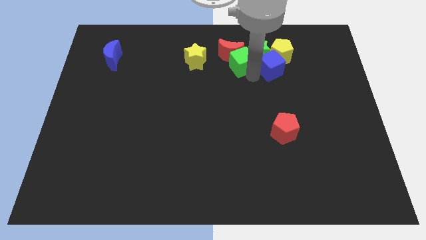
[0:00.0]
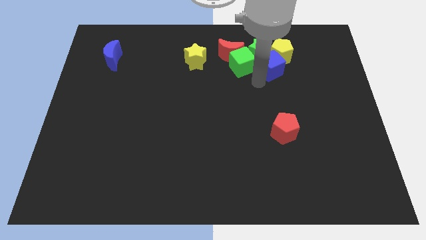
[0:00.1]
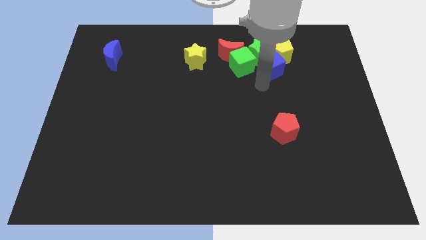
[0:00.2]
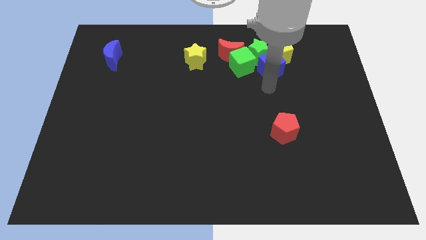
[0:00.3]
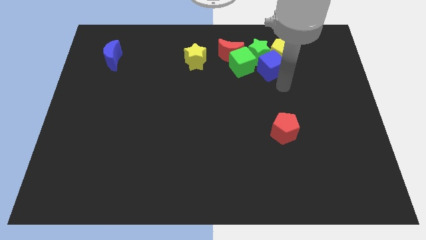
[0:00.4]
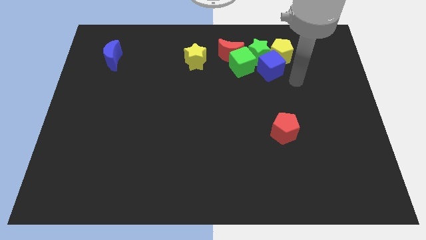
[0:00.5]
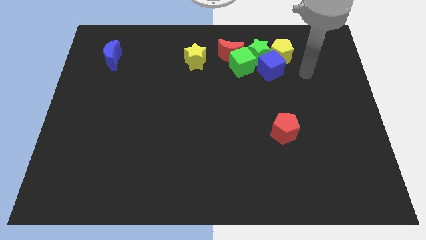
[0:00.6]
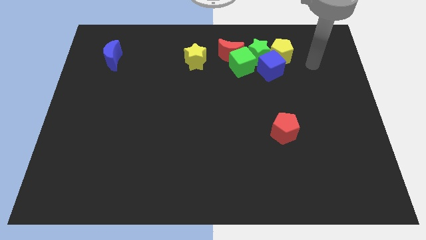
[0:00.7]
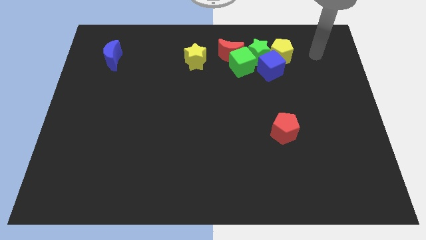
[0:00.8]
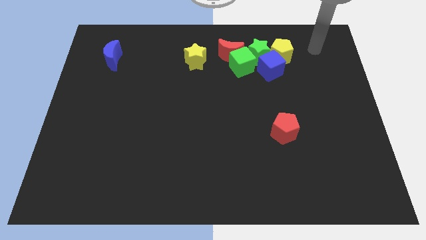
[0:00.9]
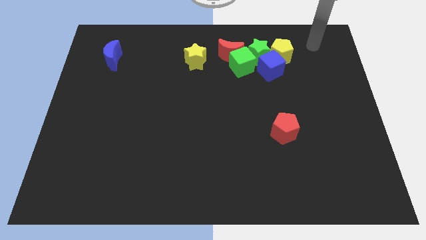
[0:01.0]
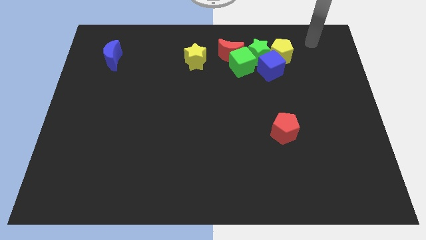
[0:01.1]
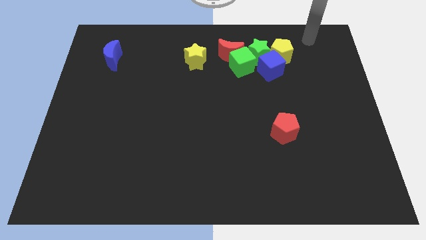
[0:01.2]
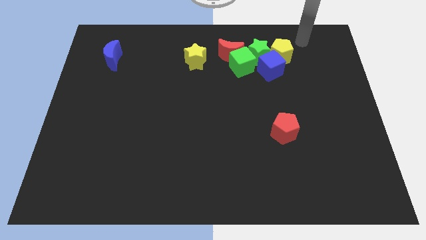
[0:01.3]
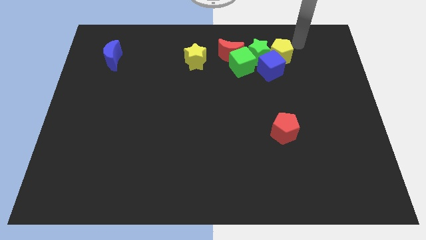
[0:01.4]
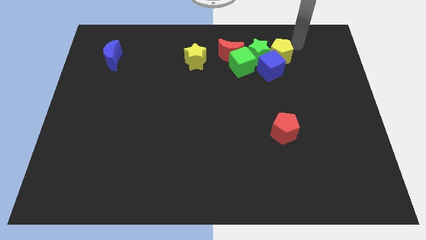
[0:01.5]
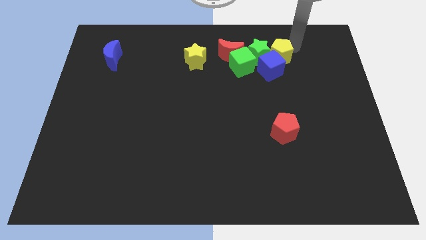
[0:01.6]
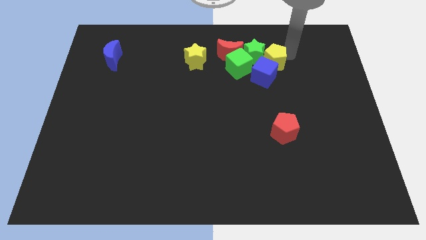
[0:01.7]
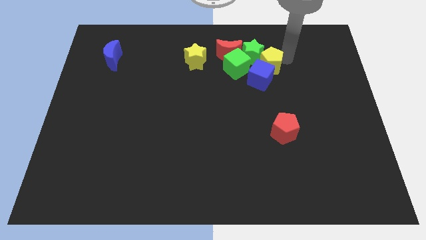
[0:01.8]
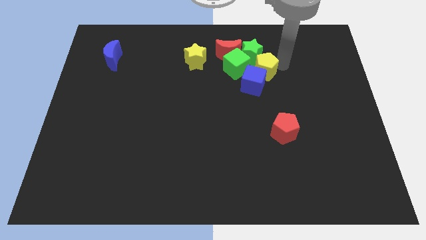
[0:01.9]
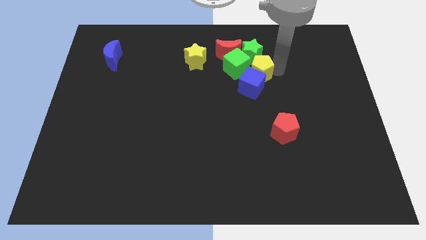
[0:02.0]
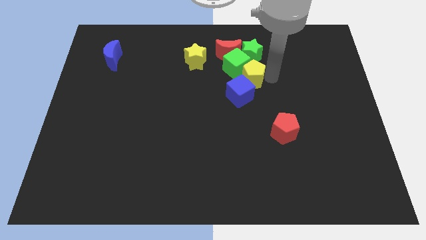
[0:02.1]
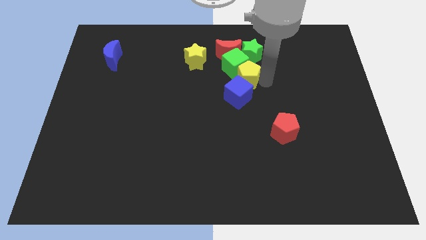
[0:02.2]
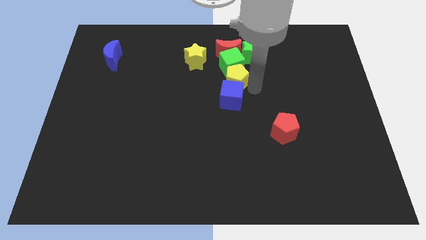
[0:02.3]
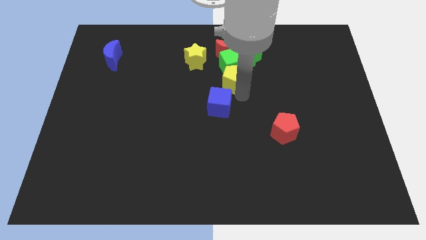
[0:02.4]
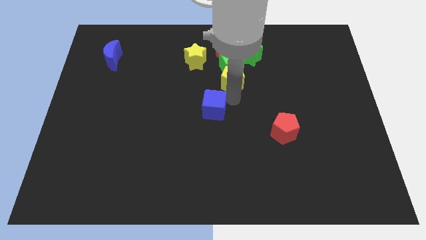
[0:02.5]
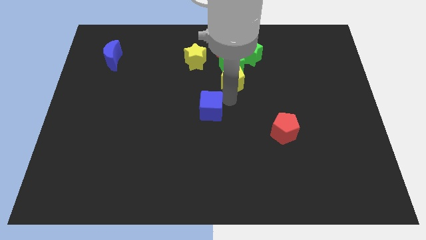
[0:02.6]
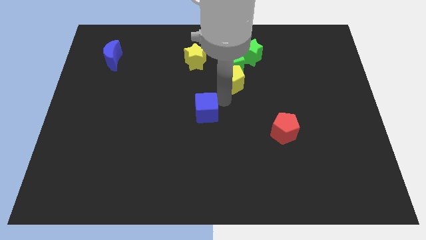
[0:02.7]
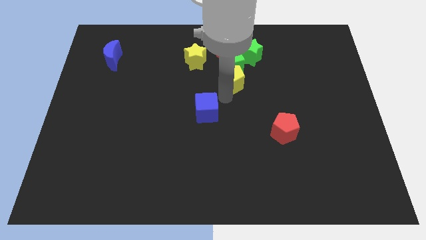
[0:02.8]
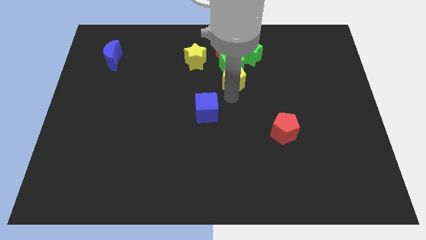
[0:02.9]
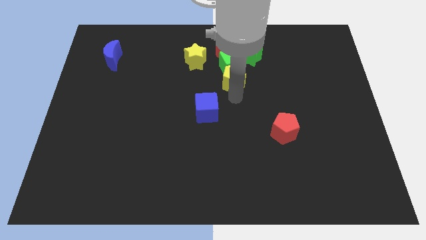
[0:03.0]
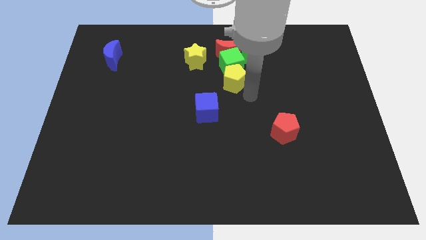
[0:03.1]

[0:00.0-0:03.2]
push the yellow pentagon into the blue cube

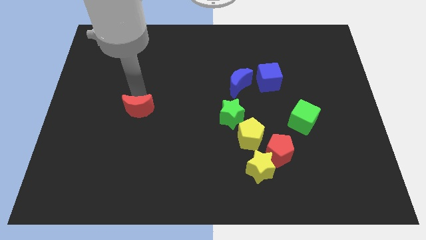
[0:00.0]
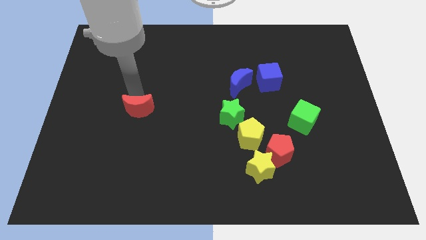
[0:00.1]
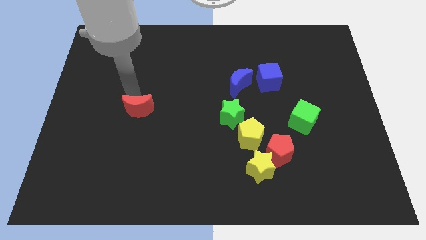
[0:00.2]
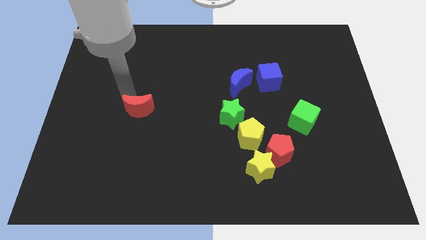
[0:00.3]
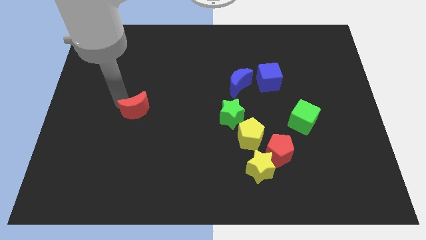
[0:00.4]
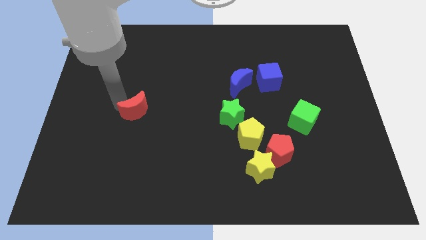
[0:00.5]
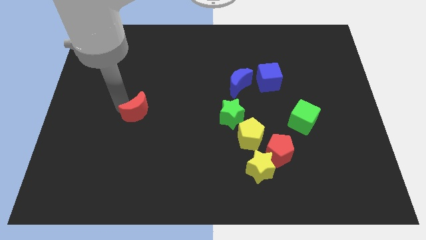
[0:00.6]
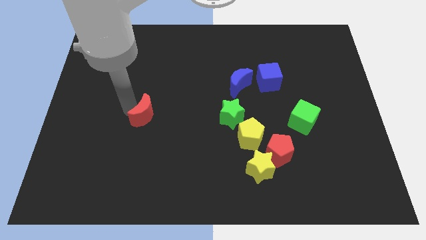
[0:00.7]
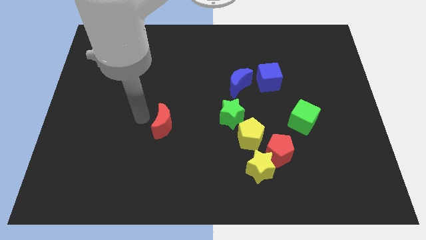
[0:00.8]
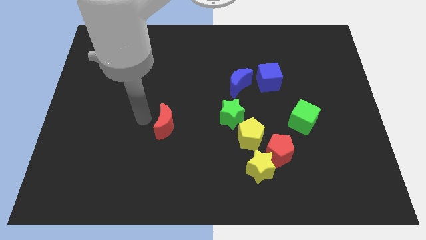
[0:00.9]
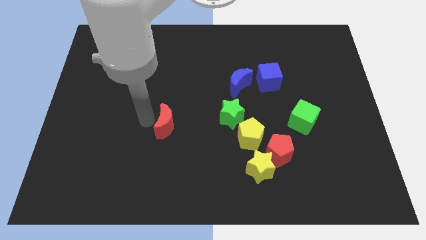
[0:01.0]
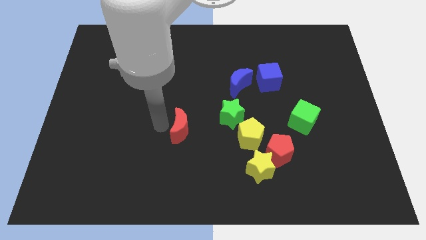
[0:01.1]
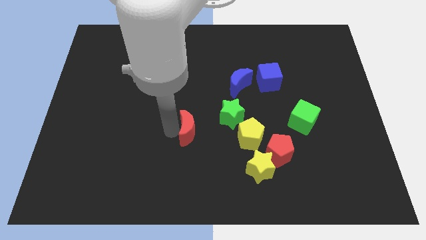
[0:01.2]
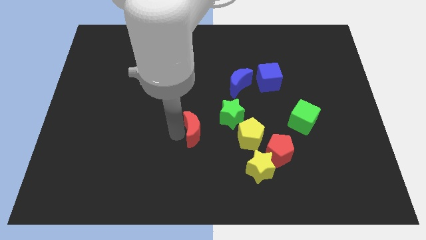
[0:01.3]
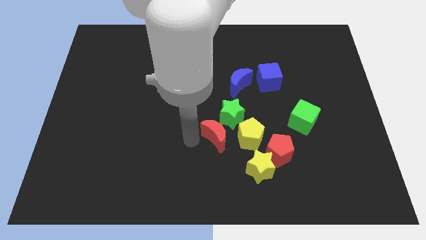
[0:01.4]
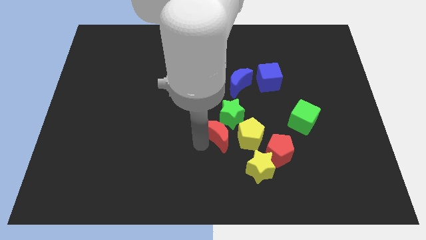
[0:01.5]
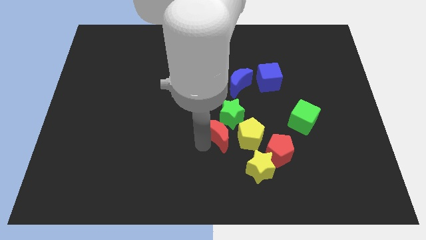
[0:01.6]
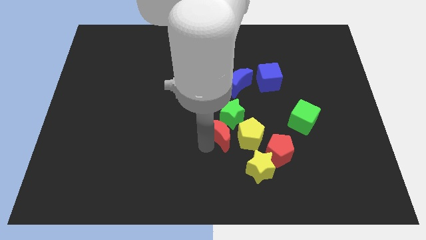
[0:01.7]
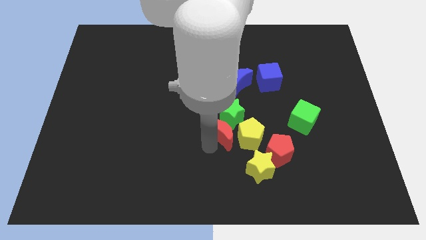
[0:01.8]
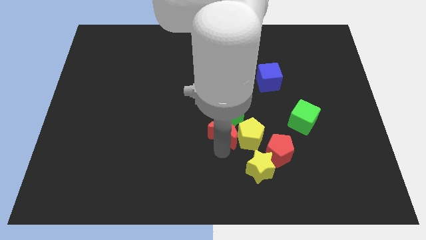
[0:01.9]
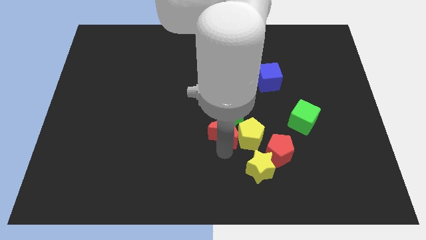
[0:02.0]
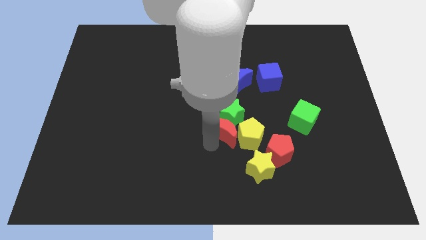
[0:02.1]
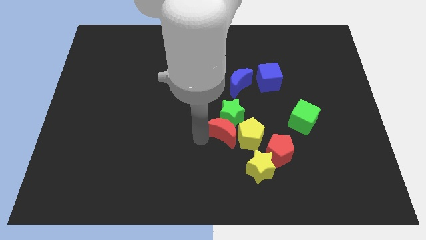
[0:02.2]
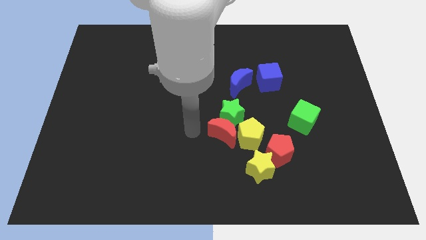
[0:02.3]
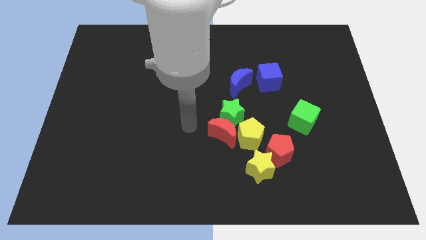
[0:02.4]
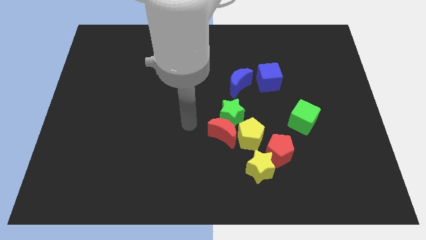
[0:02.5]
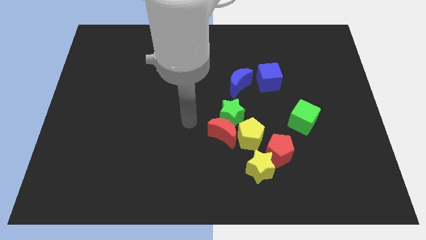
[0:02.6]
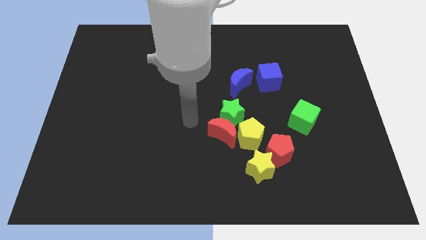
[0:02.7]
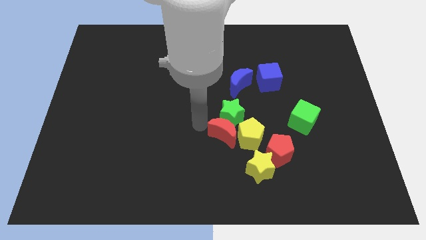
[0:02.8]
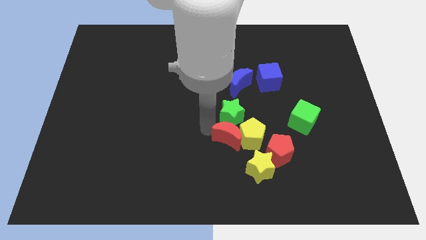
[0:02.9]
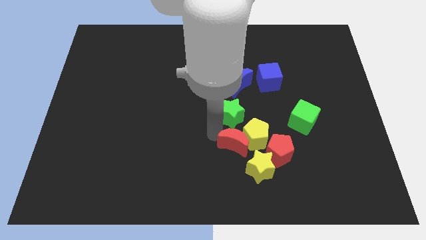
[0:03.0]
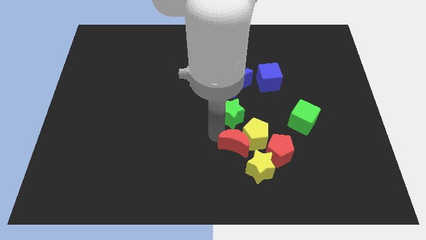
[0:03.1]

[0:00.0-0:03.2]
slide the red moon into the yellow pentagon

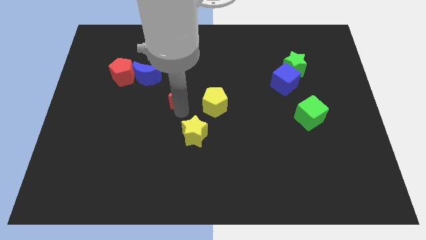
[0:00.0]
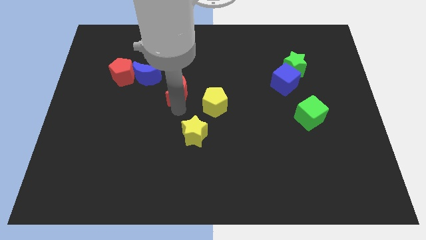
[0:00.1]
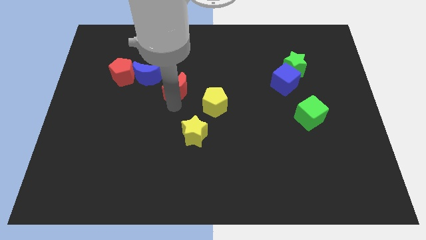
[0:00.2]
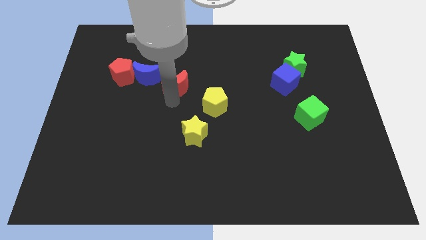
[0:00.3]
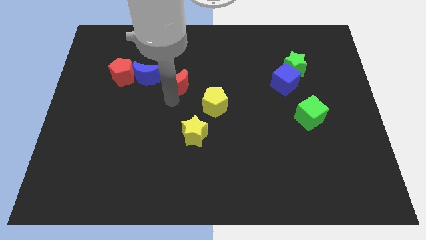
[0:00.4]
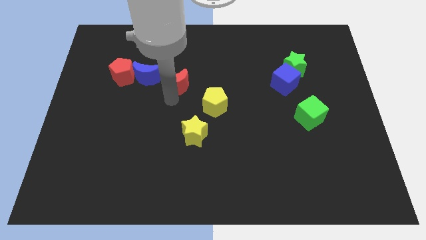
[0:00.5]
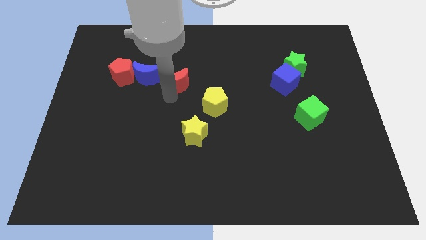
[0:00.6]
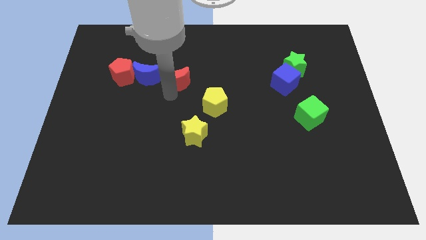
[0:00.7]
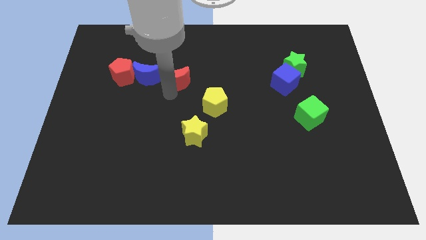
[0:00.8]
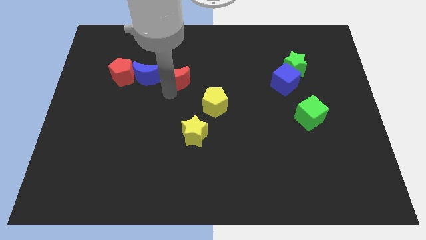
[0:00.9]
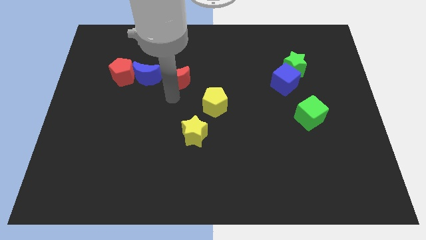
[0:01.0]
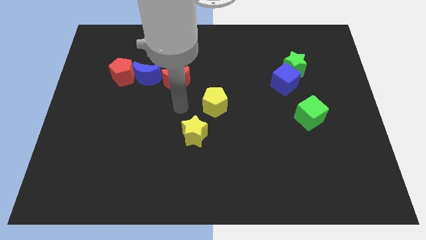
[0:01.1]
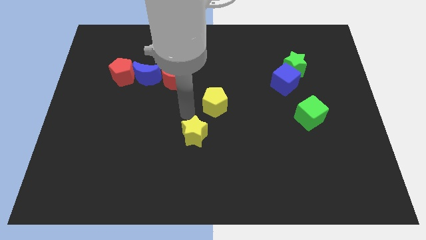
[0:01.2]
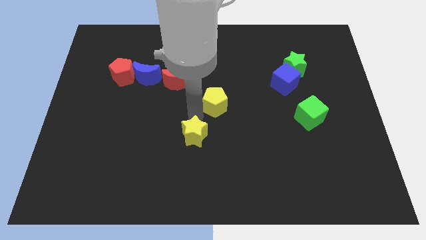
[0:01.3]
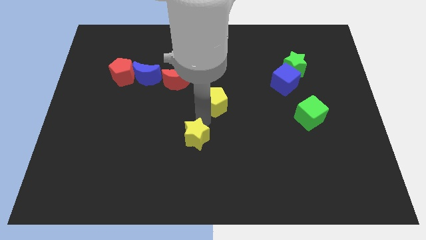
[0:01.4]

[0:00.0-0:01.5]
place the red moon to the right of the blue moon

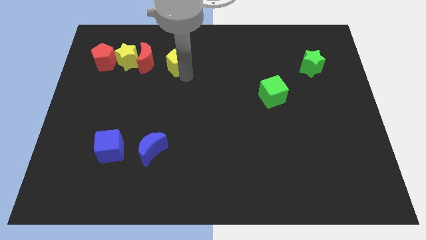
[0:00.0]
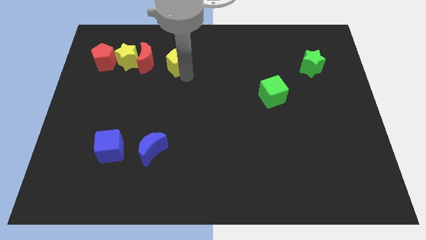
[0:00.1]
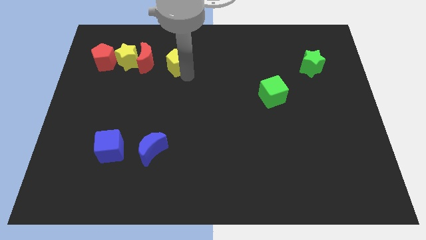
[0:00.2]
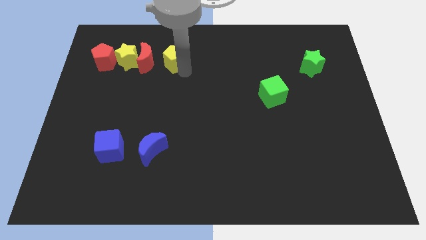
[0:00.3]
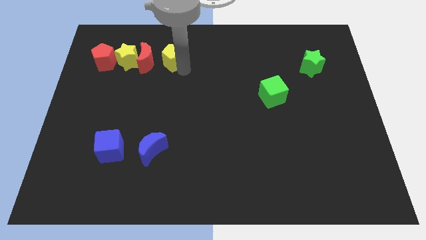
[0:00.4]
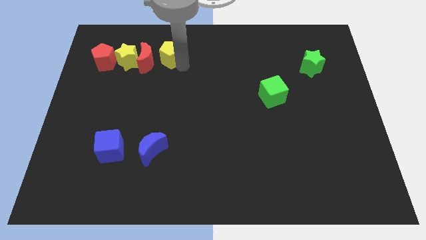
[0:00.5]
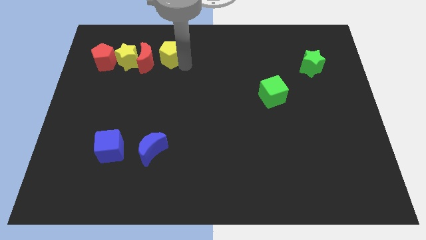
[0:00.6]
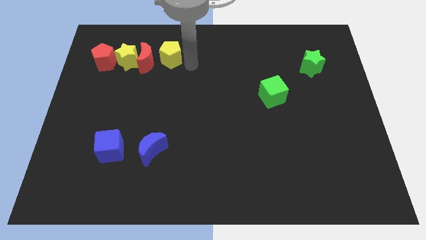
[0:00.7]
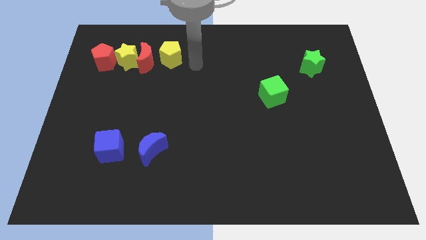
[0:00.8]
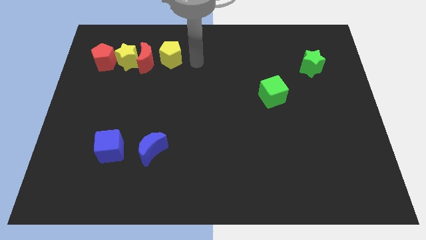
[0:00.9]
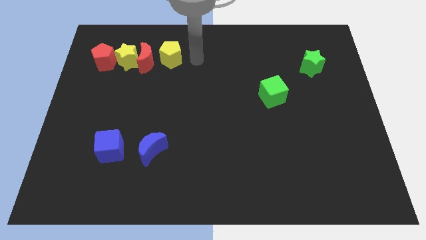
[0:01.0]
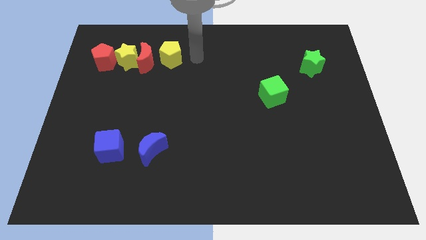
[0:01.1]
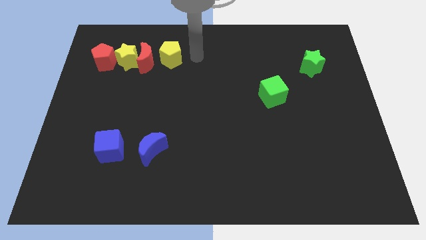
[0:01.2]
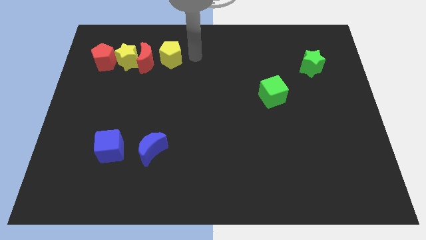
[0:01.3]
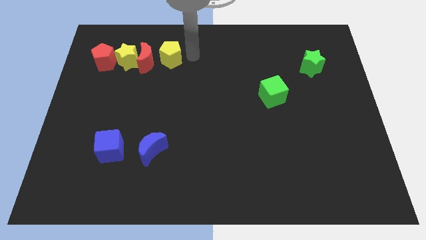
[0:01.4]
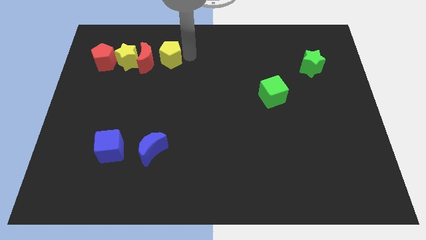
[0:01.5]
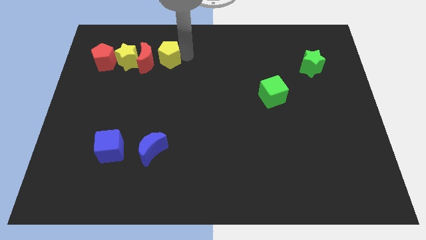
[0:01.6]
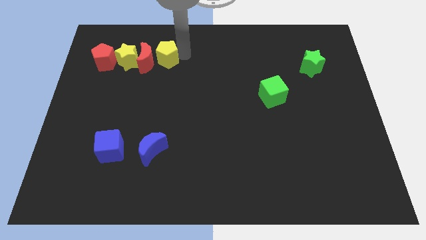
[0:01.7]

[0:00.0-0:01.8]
move the yellow pentagon to the right of the red moon
